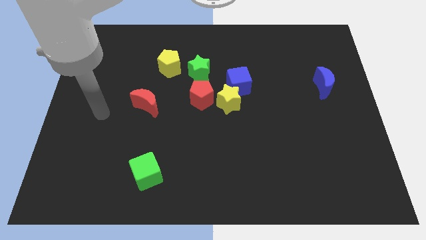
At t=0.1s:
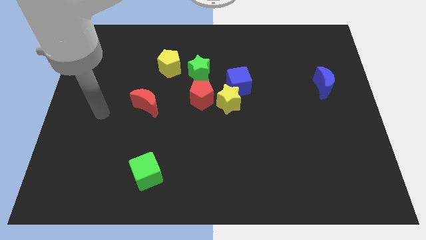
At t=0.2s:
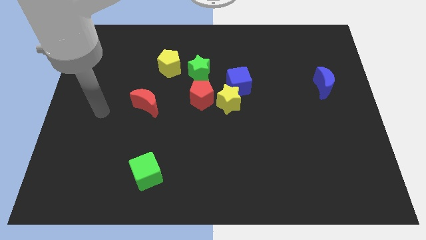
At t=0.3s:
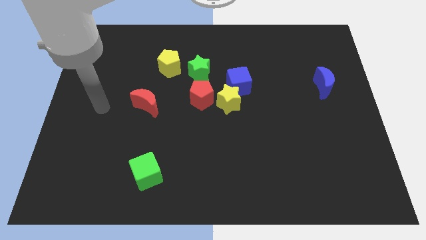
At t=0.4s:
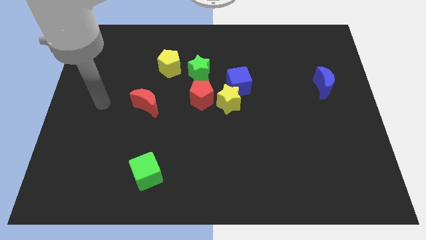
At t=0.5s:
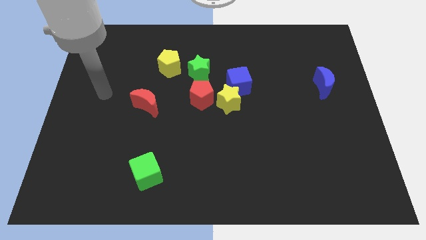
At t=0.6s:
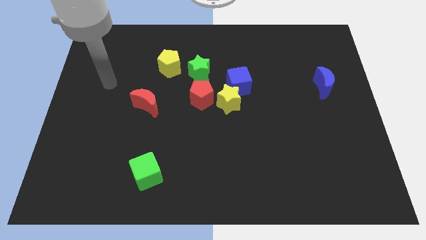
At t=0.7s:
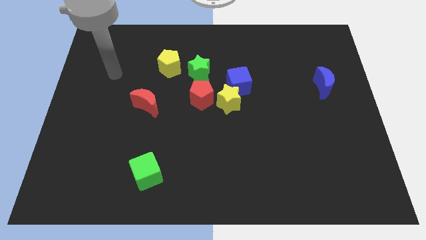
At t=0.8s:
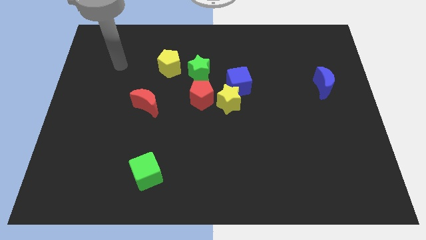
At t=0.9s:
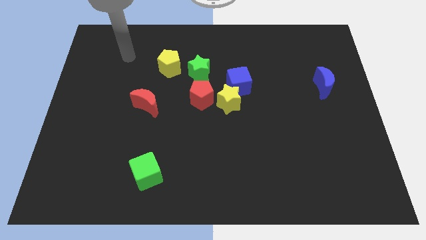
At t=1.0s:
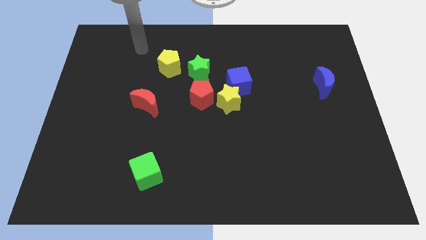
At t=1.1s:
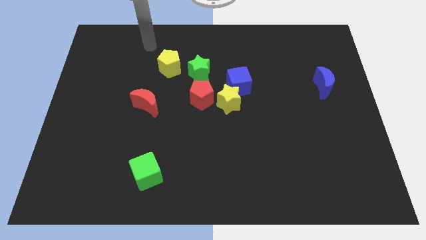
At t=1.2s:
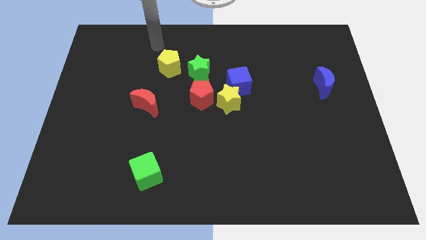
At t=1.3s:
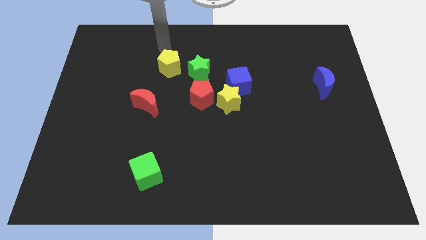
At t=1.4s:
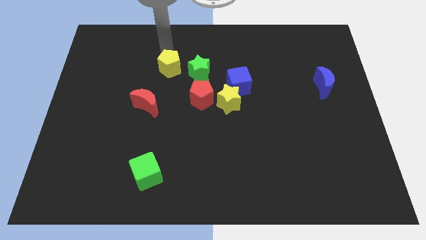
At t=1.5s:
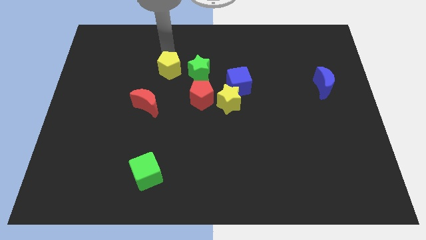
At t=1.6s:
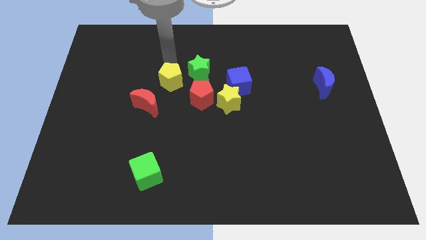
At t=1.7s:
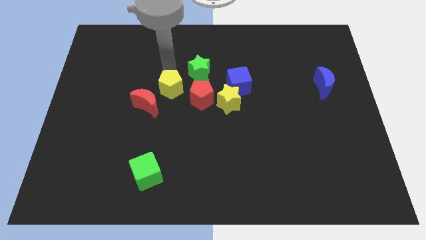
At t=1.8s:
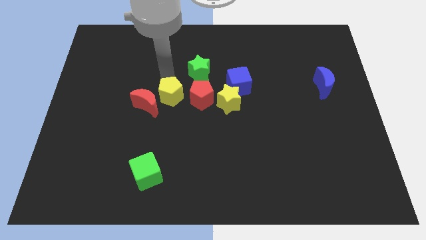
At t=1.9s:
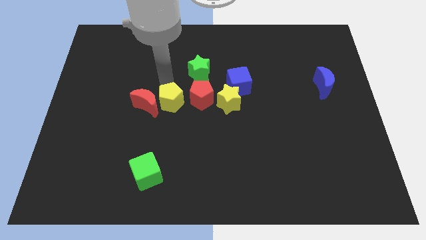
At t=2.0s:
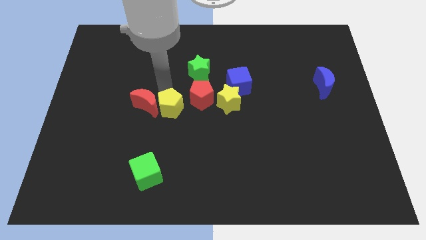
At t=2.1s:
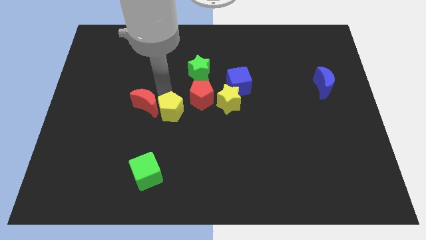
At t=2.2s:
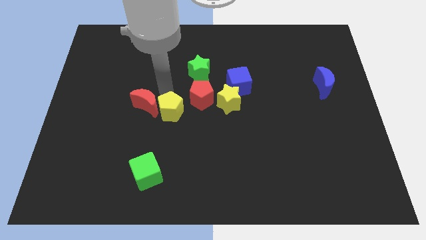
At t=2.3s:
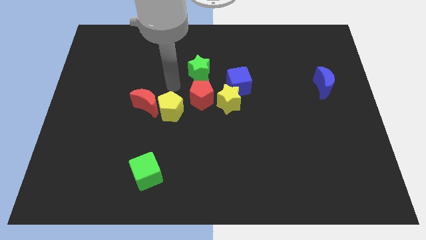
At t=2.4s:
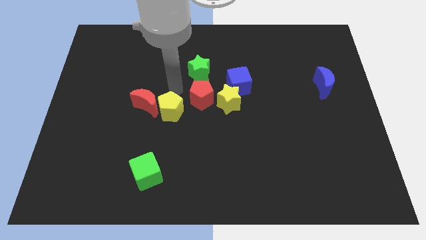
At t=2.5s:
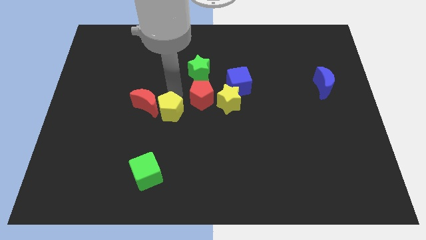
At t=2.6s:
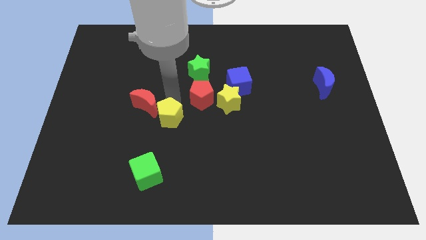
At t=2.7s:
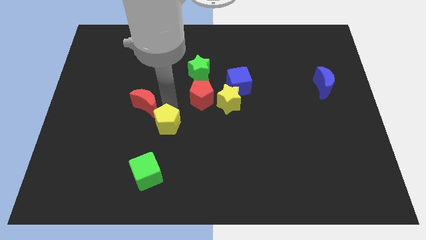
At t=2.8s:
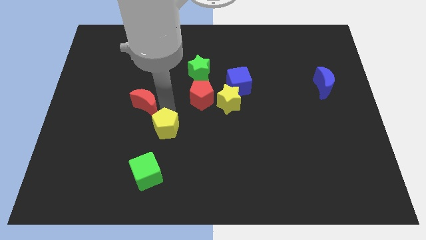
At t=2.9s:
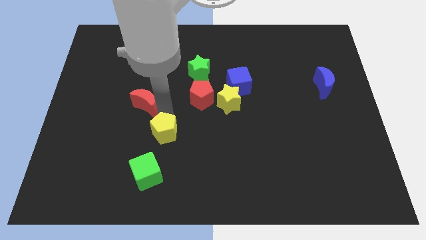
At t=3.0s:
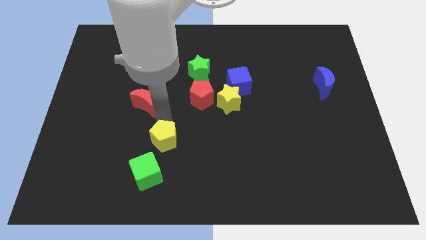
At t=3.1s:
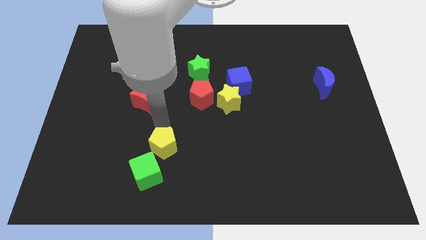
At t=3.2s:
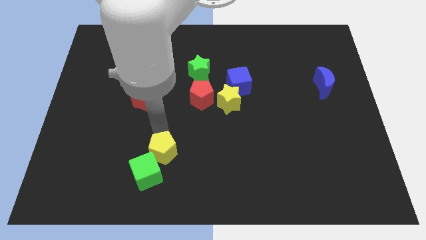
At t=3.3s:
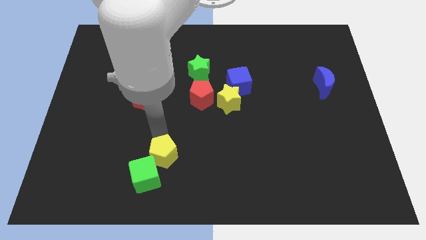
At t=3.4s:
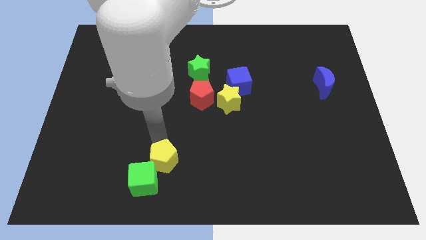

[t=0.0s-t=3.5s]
push the yellow pentagon to the green cube

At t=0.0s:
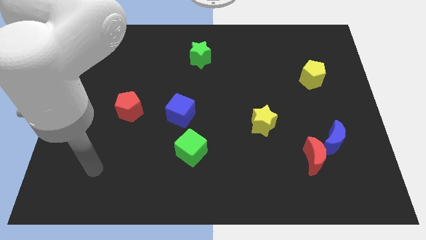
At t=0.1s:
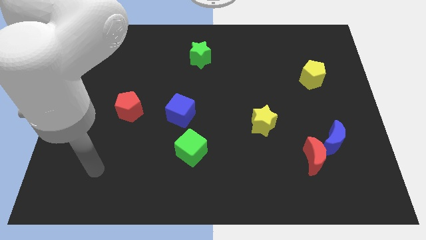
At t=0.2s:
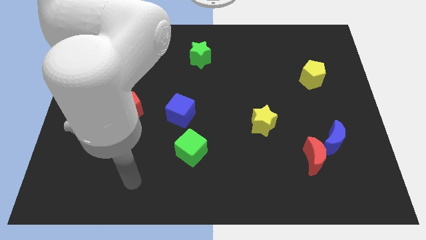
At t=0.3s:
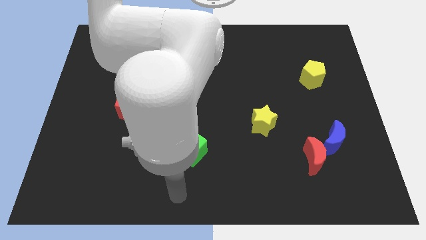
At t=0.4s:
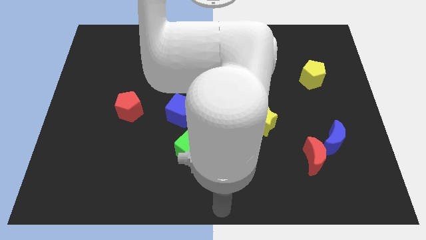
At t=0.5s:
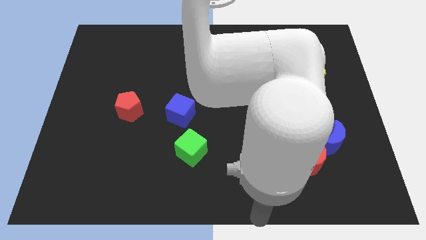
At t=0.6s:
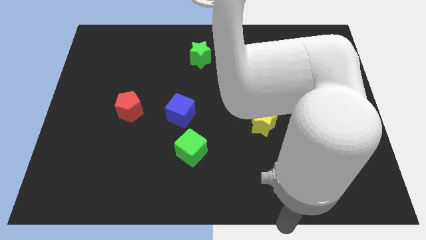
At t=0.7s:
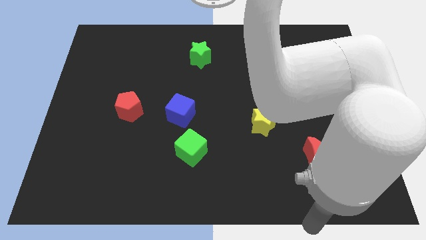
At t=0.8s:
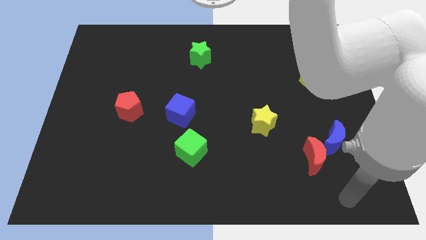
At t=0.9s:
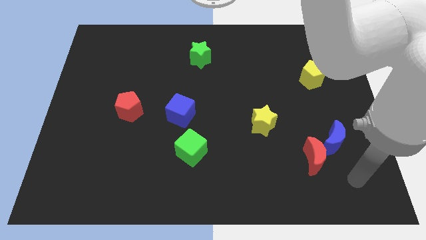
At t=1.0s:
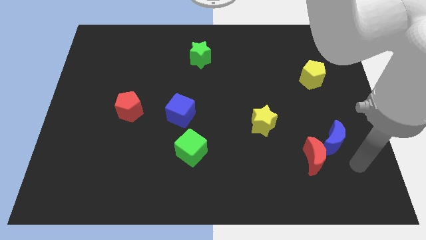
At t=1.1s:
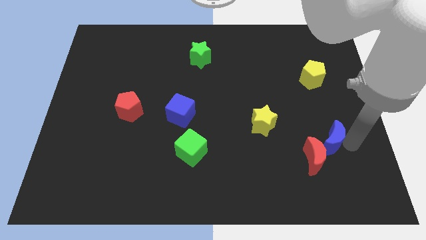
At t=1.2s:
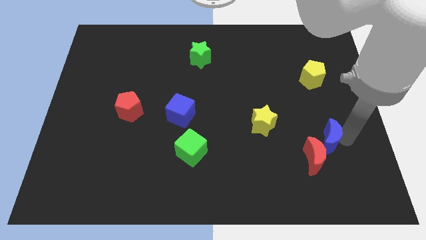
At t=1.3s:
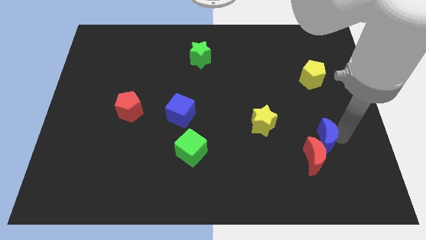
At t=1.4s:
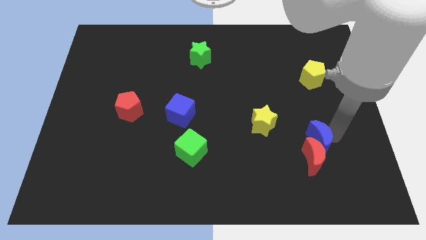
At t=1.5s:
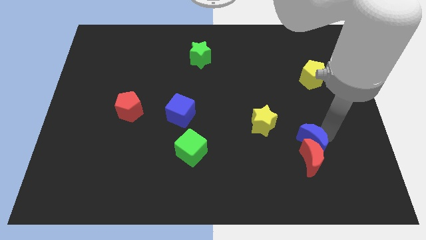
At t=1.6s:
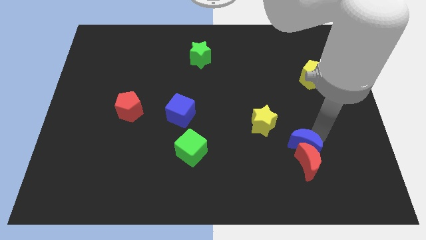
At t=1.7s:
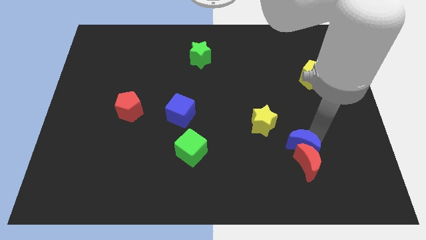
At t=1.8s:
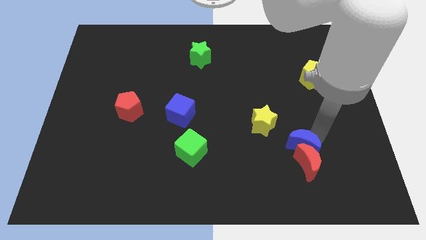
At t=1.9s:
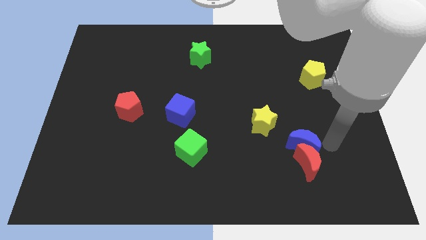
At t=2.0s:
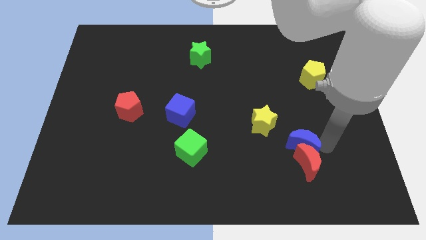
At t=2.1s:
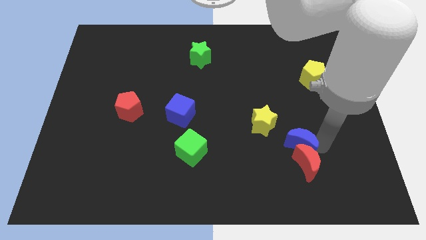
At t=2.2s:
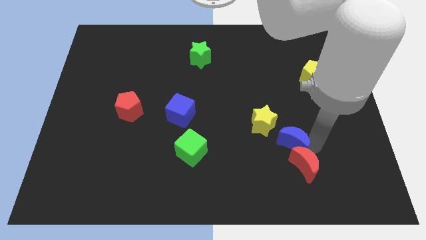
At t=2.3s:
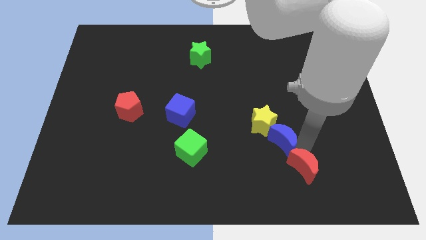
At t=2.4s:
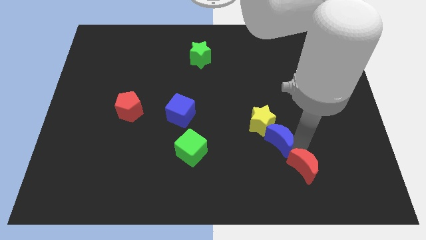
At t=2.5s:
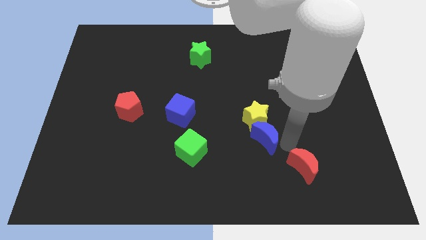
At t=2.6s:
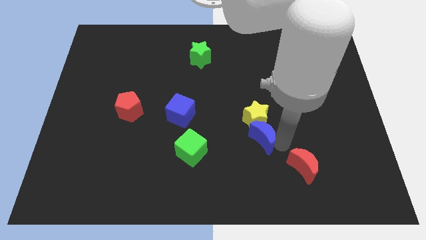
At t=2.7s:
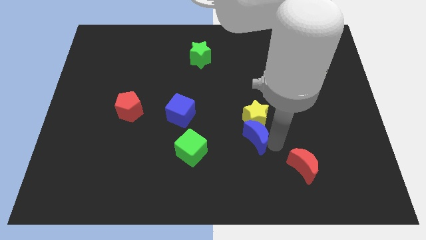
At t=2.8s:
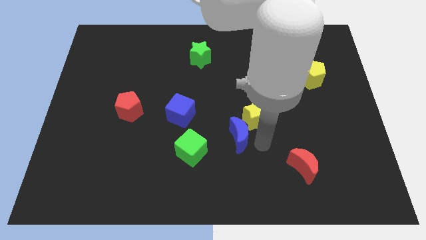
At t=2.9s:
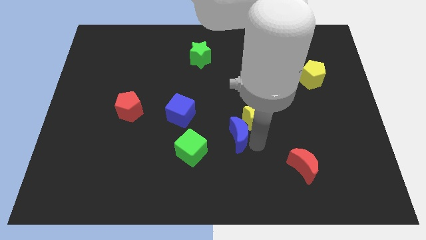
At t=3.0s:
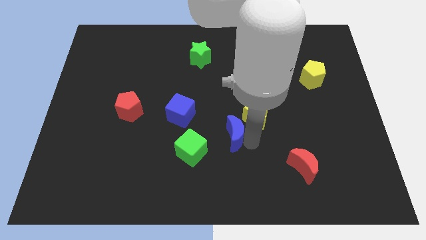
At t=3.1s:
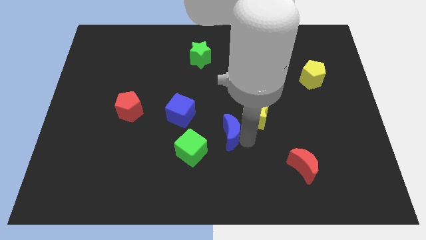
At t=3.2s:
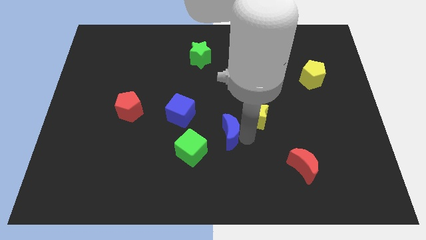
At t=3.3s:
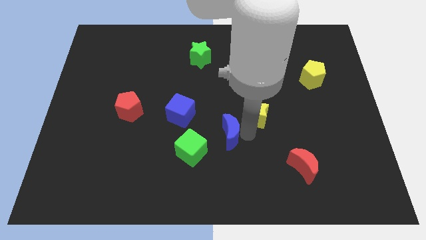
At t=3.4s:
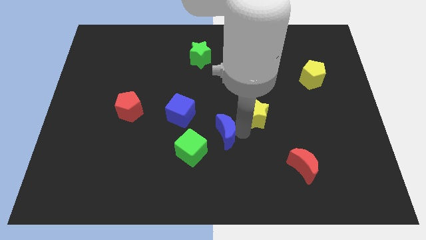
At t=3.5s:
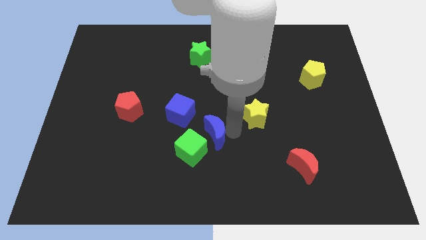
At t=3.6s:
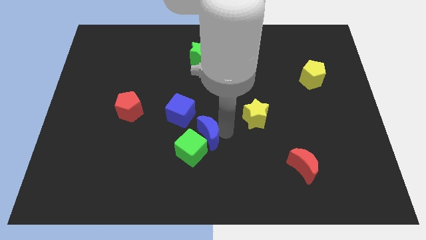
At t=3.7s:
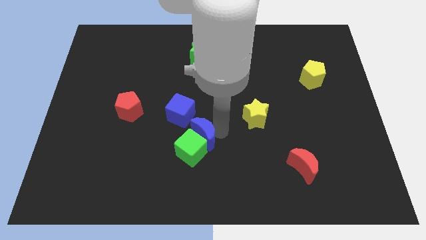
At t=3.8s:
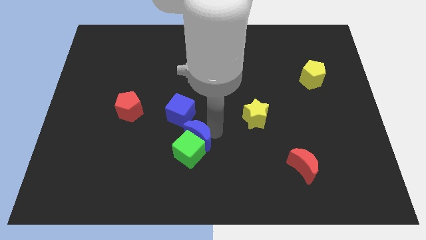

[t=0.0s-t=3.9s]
put the blue moon next to the green cube

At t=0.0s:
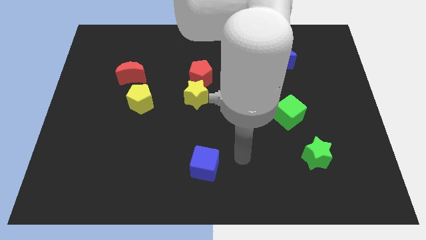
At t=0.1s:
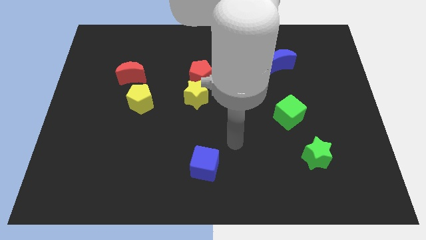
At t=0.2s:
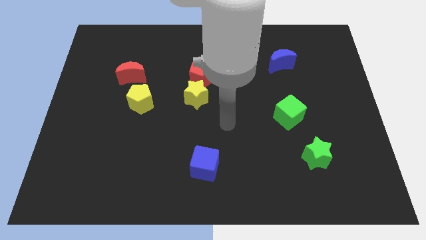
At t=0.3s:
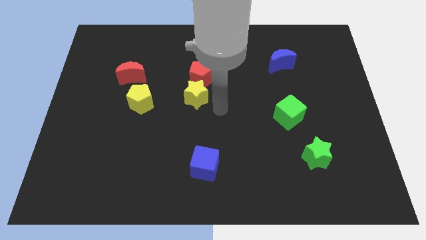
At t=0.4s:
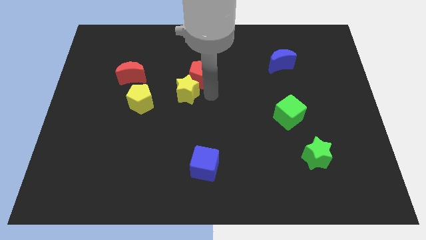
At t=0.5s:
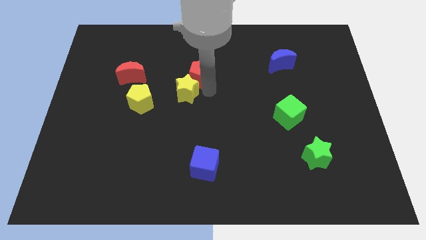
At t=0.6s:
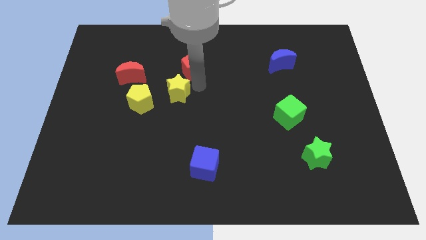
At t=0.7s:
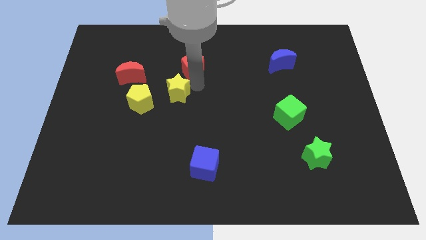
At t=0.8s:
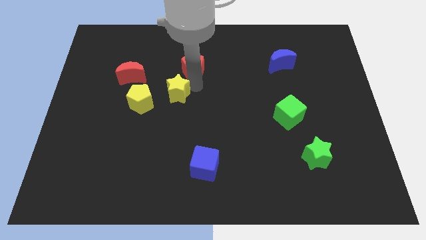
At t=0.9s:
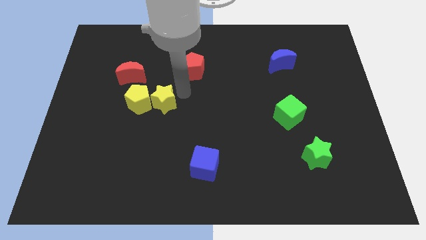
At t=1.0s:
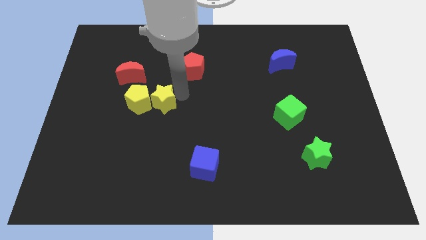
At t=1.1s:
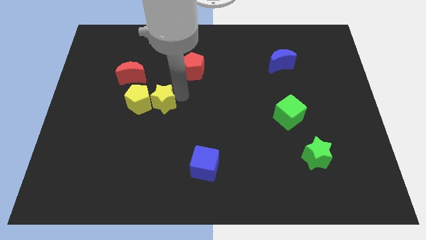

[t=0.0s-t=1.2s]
move the yellow star to the yellow pentagon
